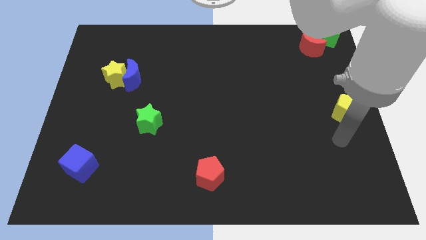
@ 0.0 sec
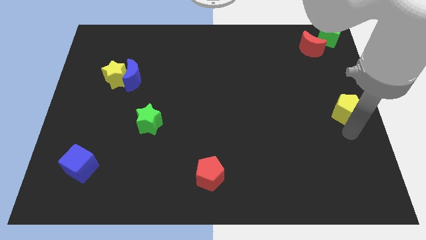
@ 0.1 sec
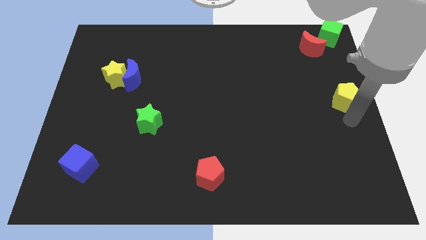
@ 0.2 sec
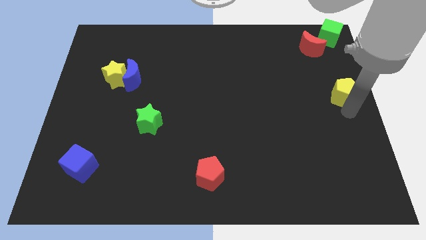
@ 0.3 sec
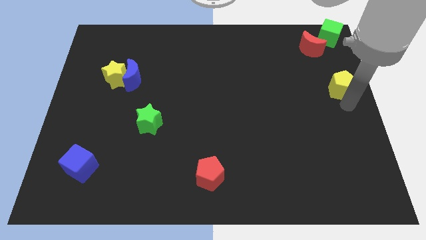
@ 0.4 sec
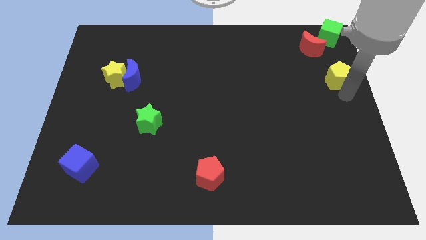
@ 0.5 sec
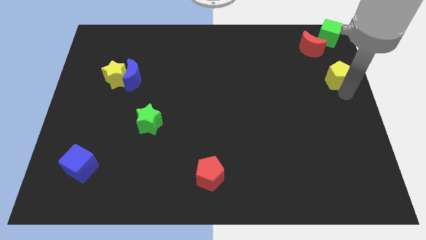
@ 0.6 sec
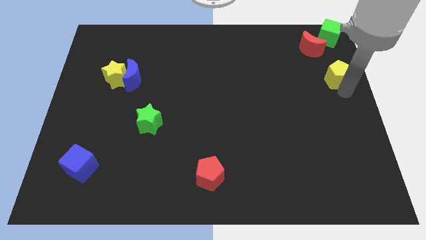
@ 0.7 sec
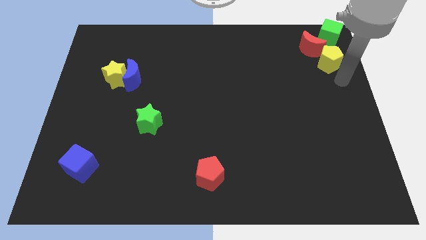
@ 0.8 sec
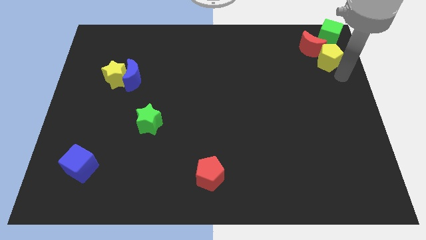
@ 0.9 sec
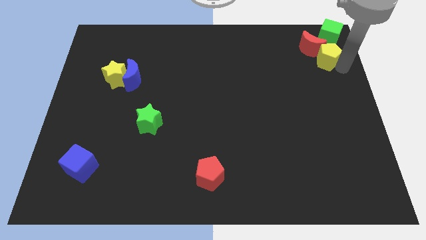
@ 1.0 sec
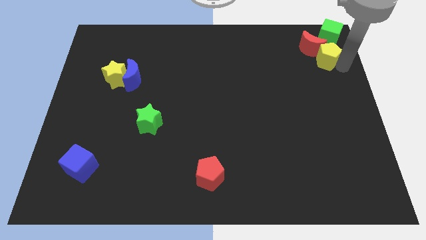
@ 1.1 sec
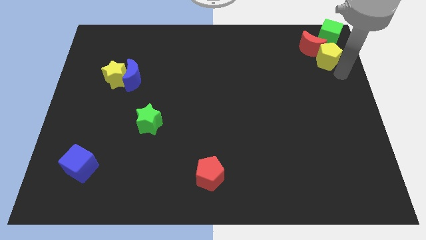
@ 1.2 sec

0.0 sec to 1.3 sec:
push the yellow pentagon towards the top right corner of the board

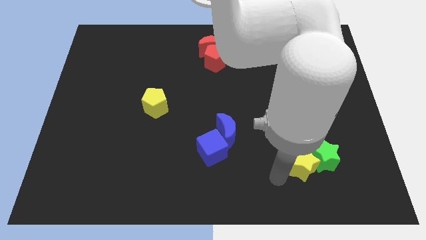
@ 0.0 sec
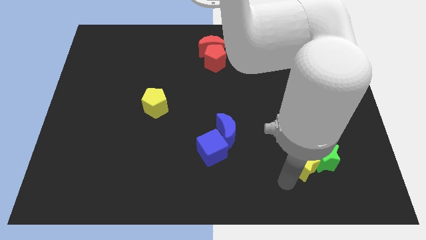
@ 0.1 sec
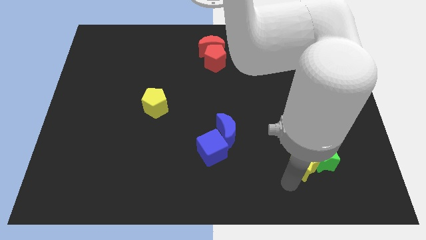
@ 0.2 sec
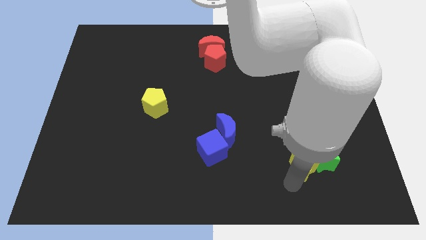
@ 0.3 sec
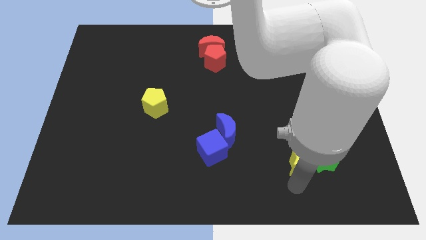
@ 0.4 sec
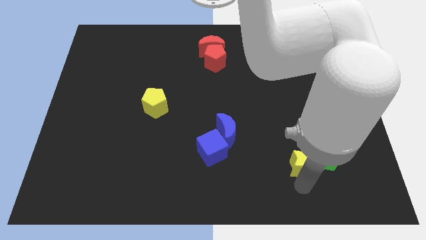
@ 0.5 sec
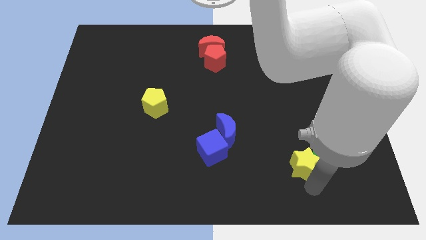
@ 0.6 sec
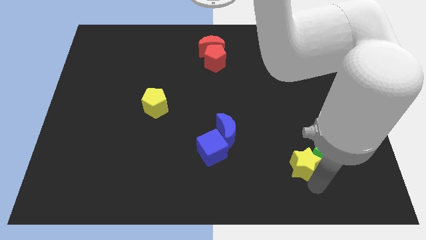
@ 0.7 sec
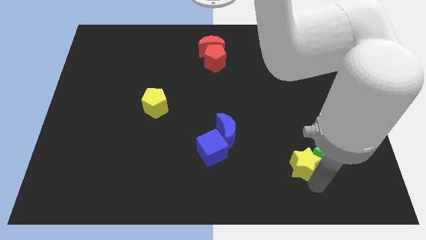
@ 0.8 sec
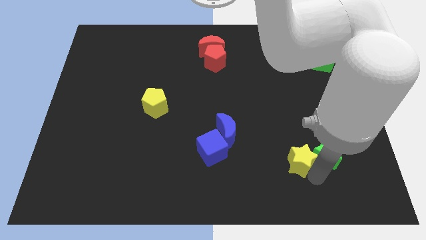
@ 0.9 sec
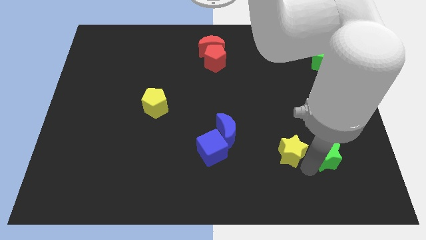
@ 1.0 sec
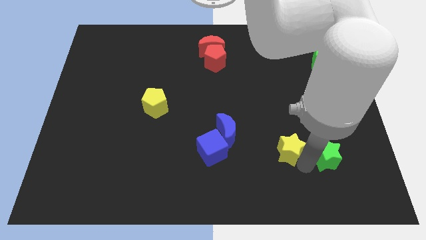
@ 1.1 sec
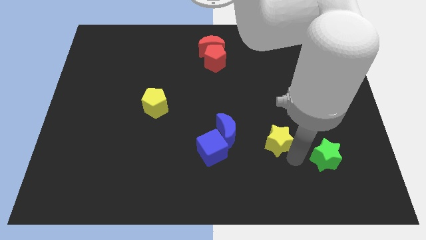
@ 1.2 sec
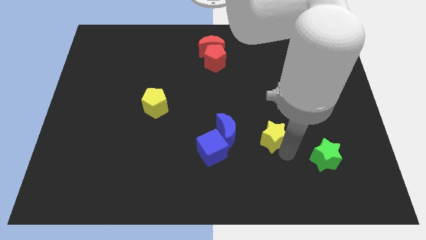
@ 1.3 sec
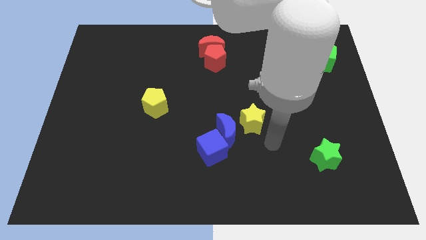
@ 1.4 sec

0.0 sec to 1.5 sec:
push the yellow star to the right side of the blue crescent

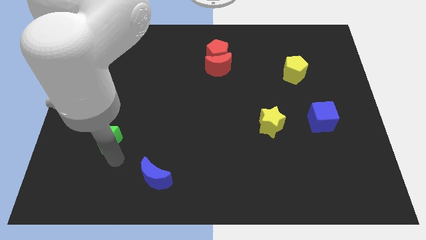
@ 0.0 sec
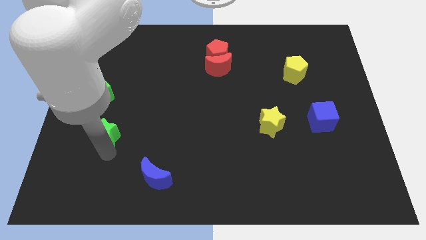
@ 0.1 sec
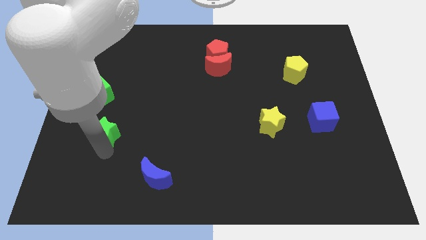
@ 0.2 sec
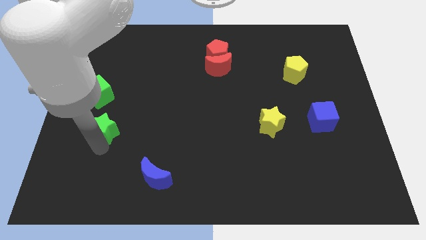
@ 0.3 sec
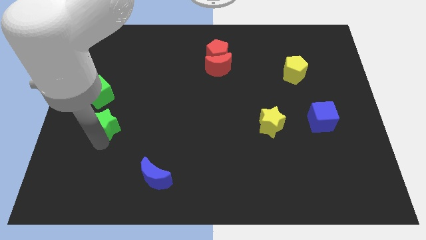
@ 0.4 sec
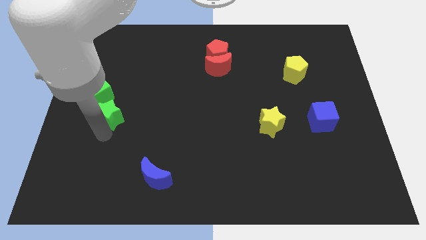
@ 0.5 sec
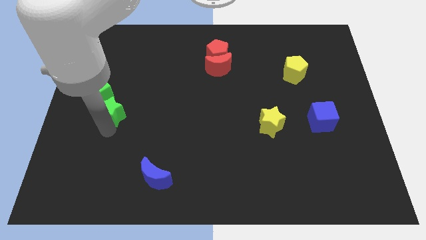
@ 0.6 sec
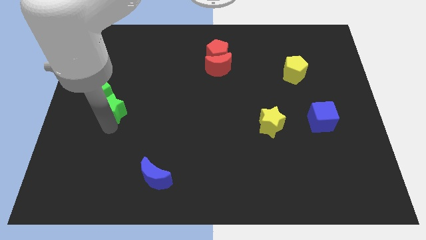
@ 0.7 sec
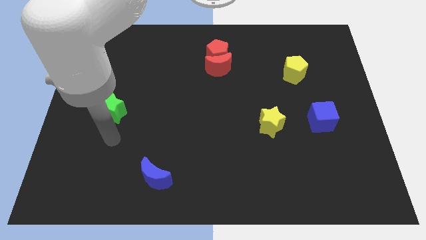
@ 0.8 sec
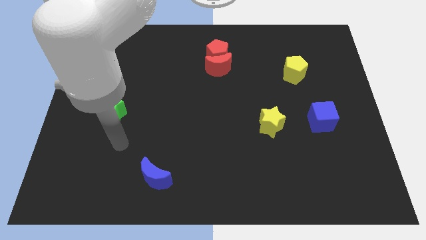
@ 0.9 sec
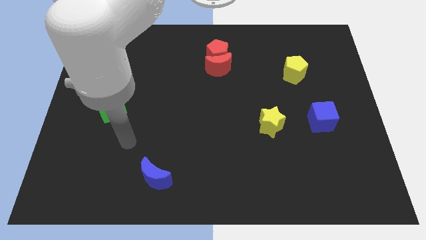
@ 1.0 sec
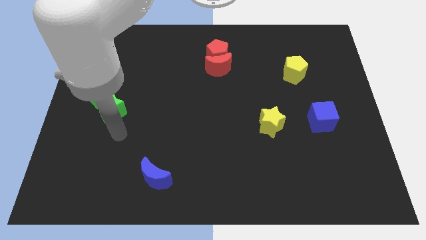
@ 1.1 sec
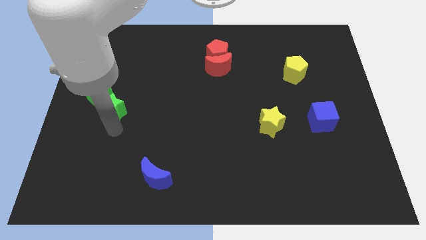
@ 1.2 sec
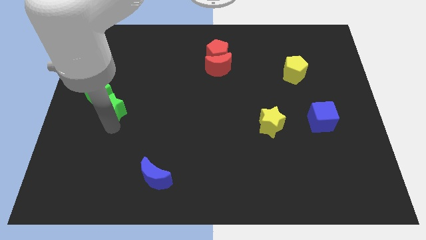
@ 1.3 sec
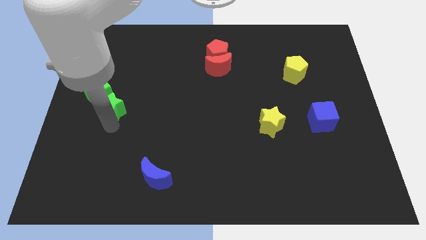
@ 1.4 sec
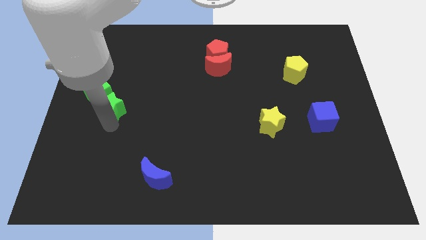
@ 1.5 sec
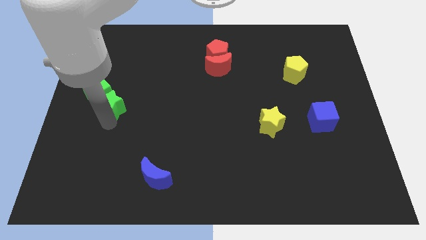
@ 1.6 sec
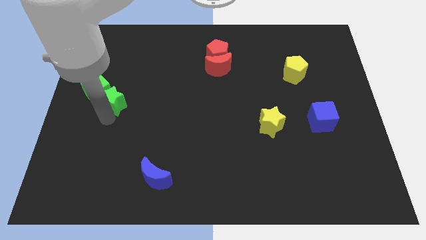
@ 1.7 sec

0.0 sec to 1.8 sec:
push the green star towards the green cube

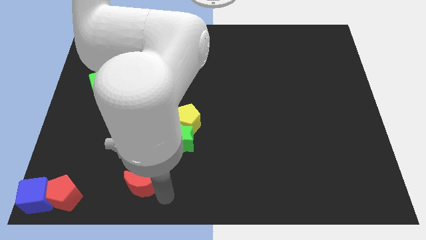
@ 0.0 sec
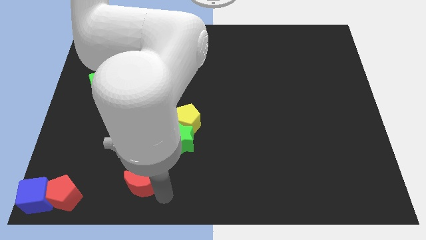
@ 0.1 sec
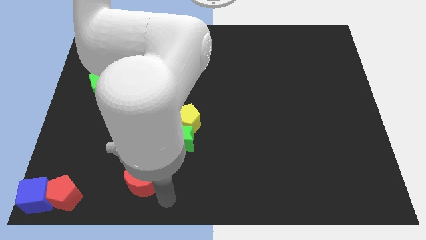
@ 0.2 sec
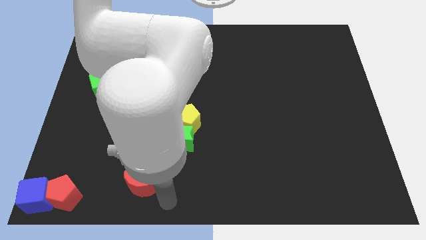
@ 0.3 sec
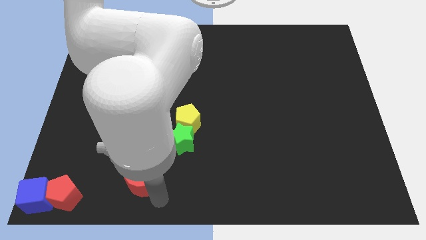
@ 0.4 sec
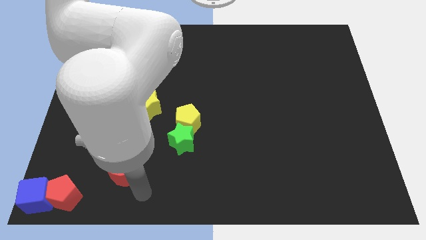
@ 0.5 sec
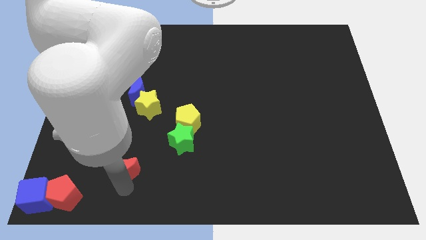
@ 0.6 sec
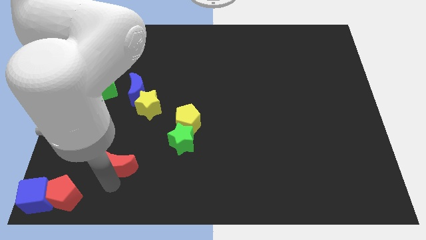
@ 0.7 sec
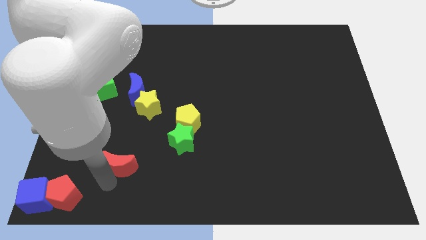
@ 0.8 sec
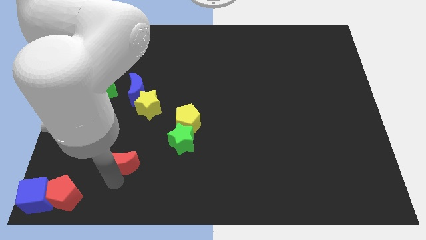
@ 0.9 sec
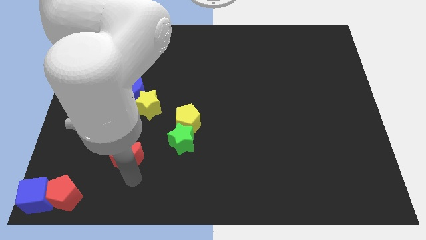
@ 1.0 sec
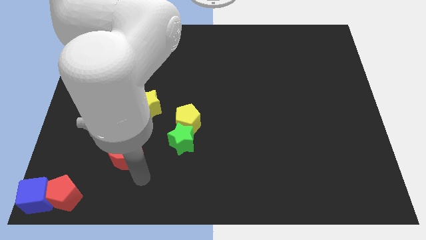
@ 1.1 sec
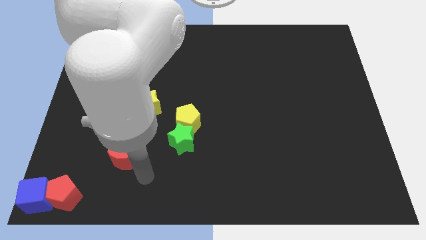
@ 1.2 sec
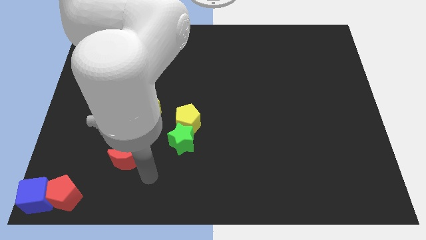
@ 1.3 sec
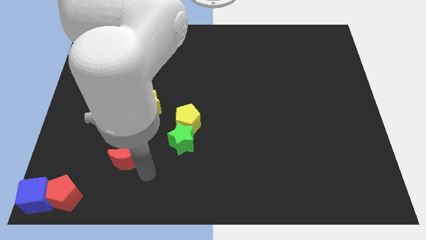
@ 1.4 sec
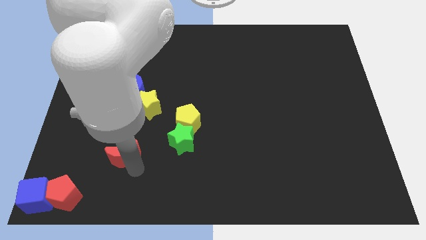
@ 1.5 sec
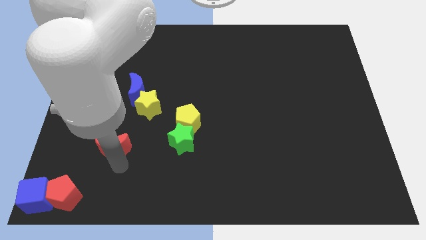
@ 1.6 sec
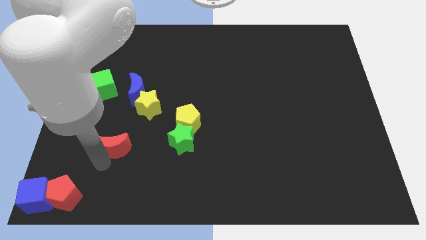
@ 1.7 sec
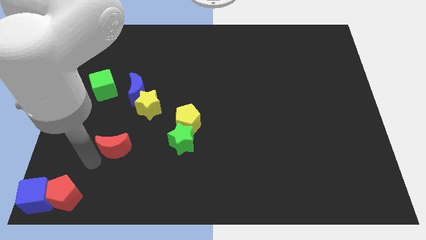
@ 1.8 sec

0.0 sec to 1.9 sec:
move the red crescent to the left of the green star

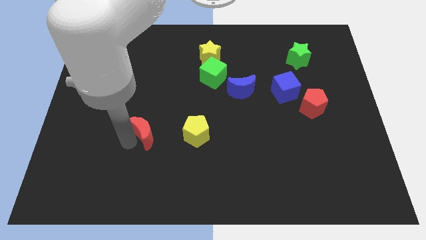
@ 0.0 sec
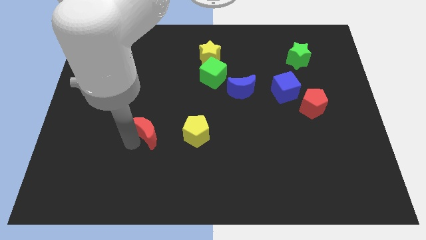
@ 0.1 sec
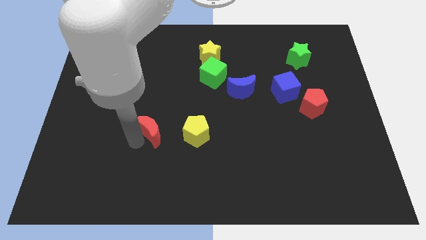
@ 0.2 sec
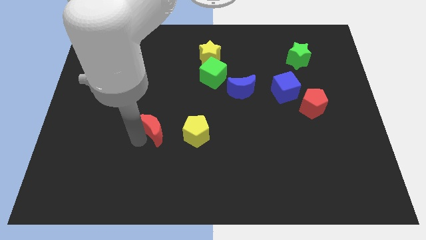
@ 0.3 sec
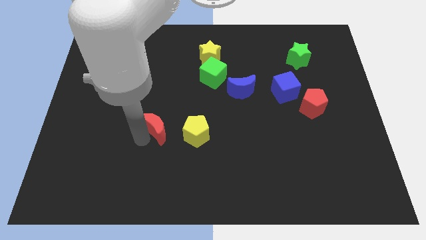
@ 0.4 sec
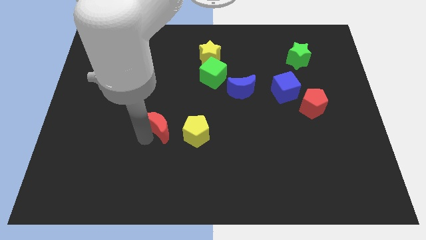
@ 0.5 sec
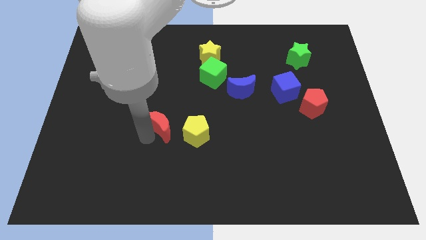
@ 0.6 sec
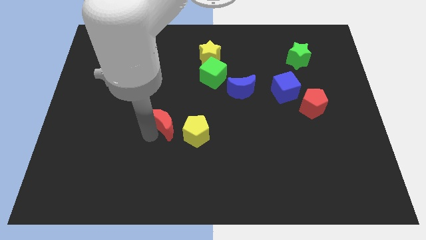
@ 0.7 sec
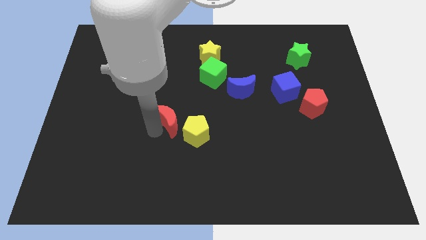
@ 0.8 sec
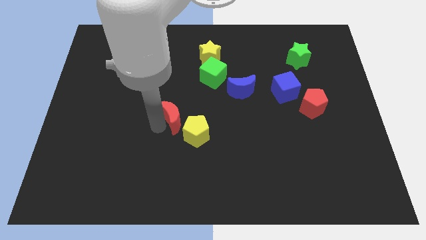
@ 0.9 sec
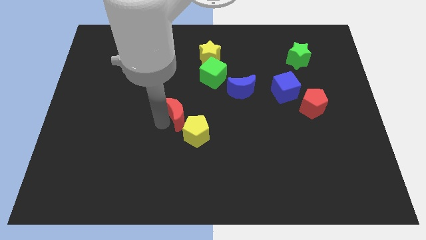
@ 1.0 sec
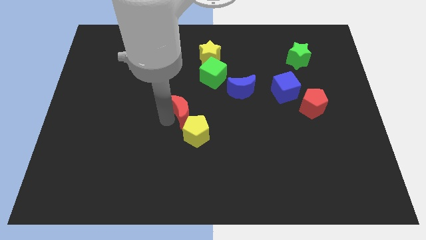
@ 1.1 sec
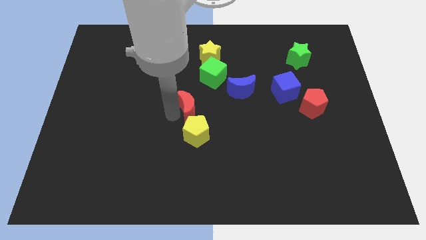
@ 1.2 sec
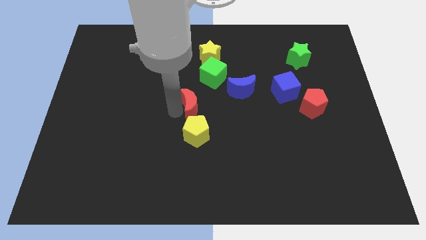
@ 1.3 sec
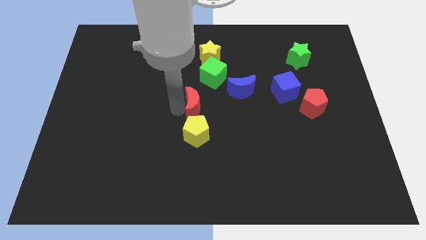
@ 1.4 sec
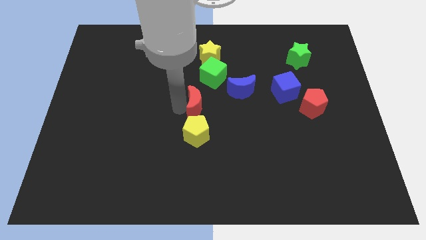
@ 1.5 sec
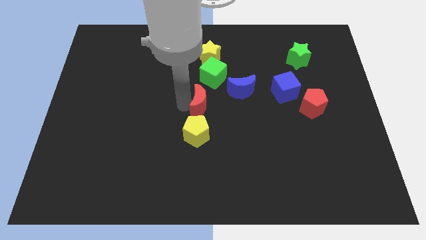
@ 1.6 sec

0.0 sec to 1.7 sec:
move red moon above yellow pentagon

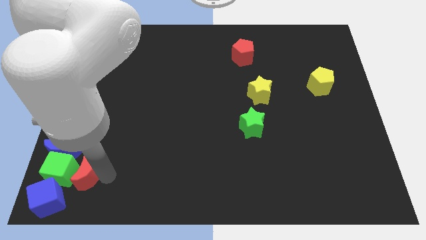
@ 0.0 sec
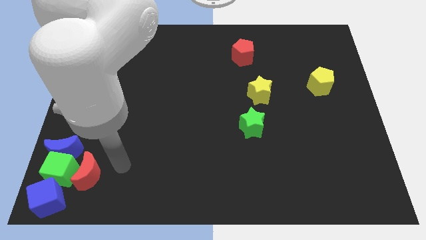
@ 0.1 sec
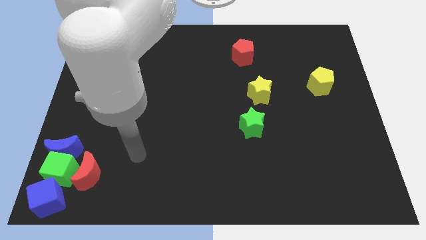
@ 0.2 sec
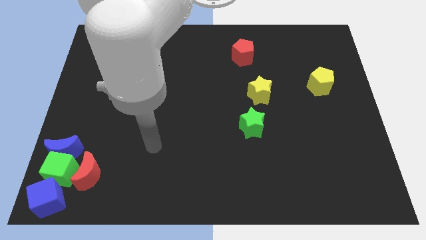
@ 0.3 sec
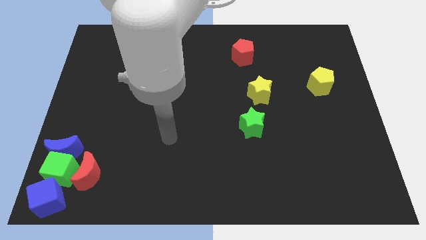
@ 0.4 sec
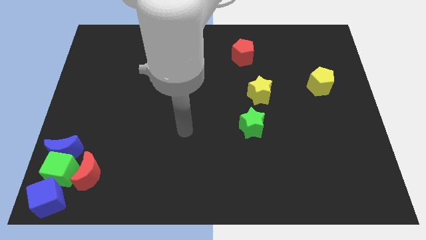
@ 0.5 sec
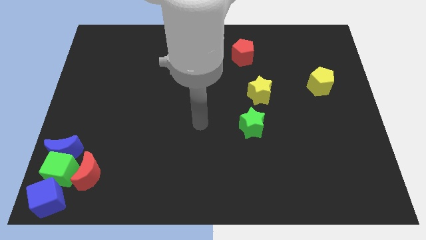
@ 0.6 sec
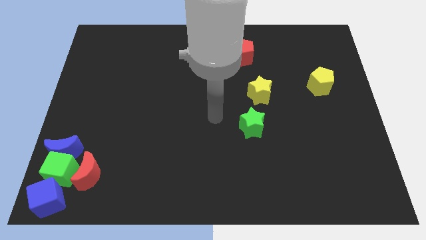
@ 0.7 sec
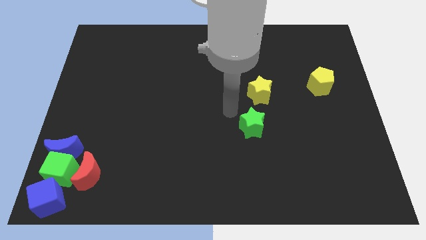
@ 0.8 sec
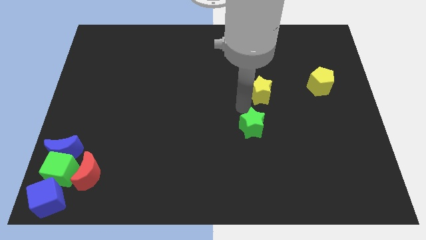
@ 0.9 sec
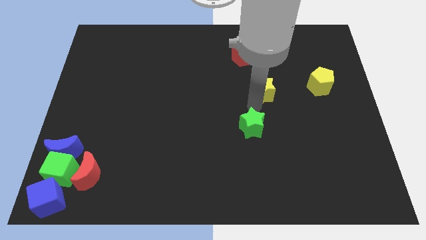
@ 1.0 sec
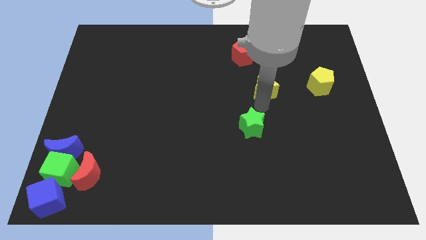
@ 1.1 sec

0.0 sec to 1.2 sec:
slightly push the yellow star towards the top side of the board
